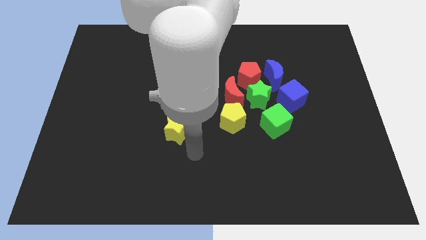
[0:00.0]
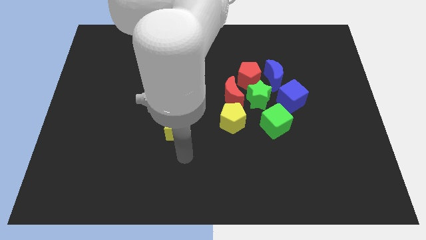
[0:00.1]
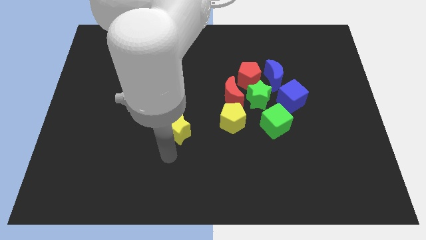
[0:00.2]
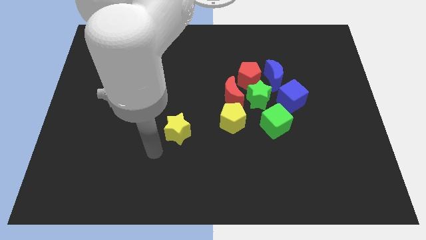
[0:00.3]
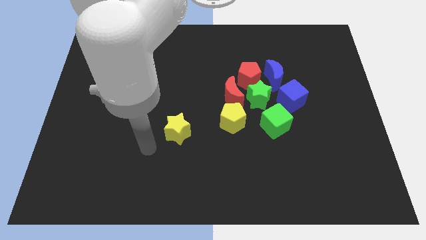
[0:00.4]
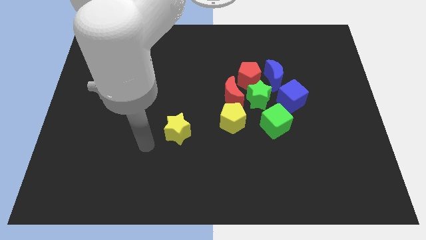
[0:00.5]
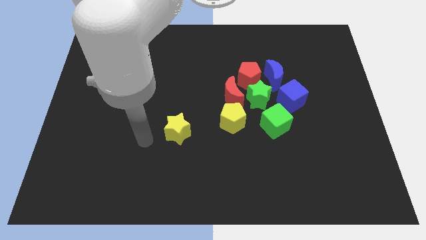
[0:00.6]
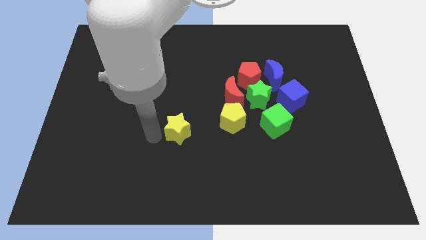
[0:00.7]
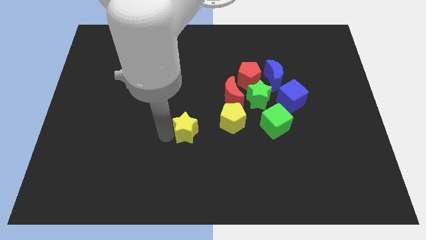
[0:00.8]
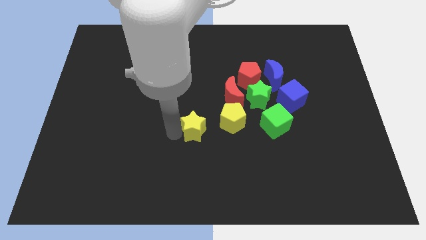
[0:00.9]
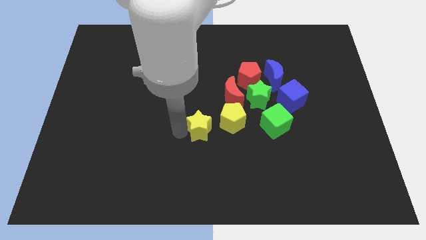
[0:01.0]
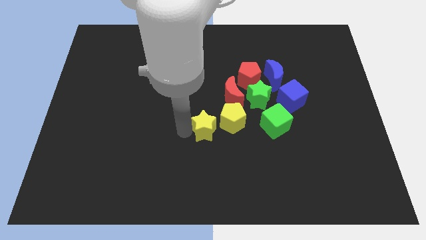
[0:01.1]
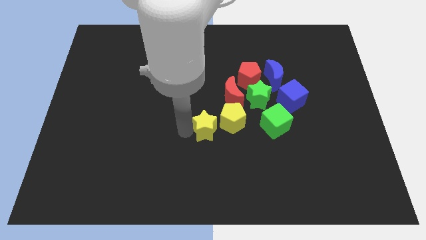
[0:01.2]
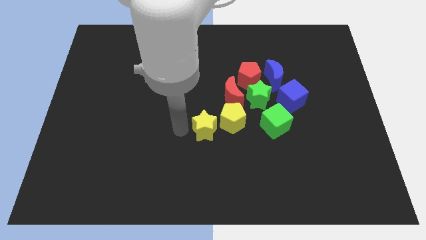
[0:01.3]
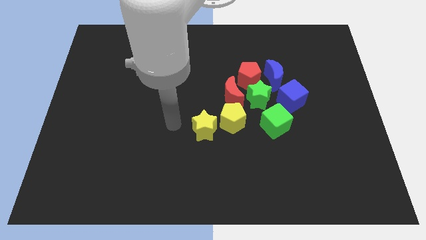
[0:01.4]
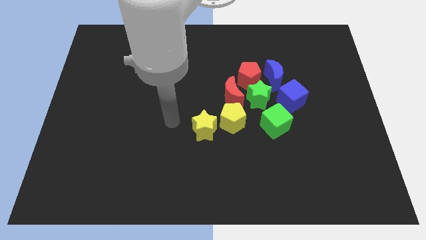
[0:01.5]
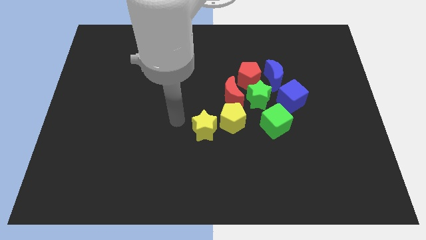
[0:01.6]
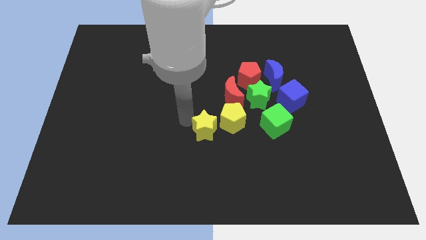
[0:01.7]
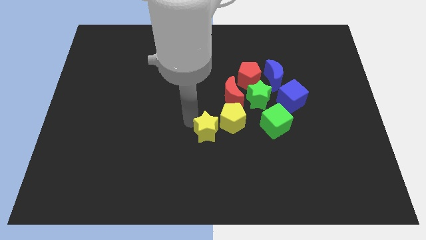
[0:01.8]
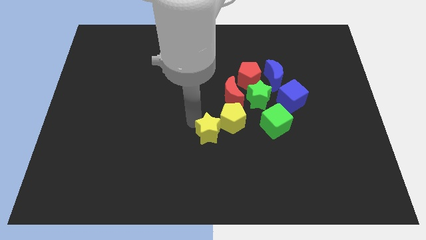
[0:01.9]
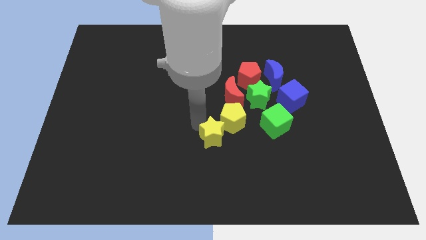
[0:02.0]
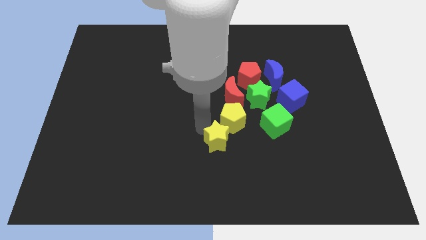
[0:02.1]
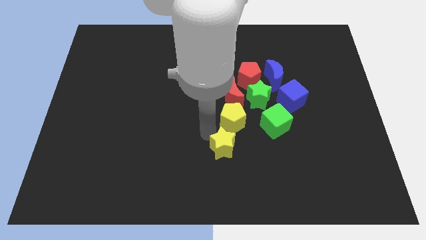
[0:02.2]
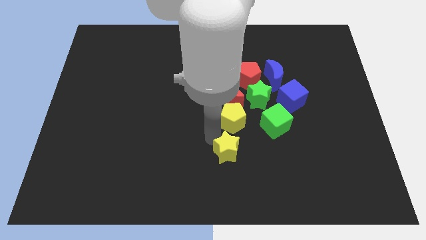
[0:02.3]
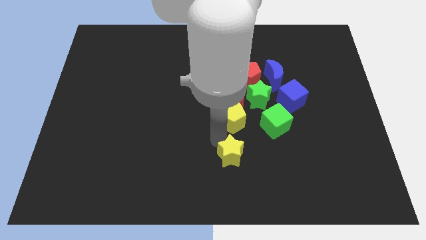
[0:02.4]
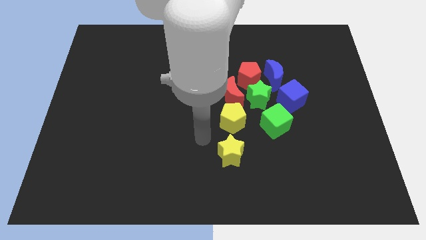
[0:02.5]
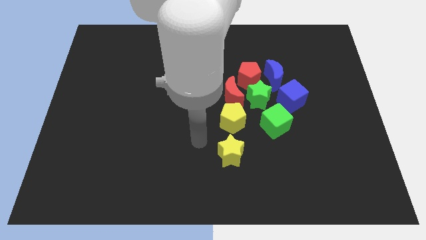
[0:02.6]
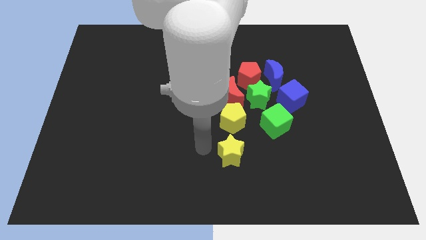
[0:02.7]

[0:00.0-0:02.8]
move the yellow star down to the yellow pentagon

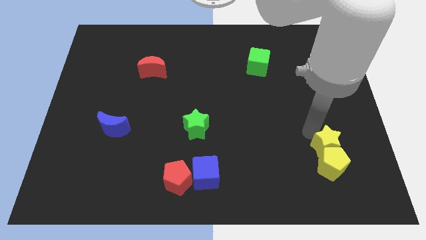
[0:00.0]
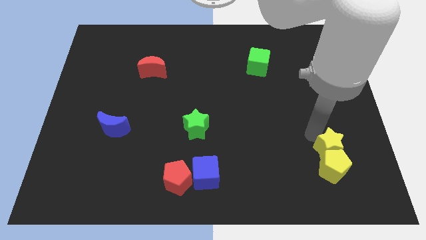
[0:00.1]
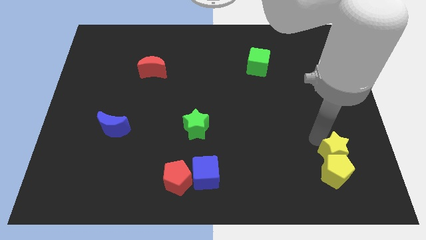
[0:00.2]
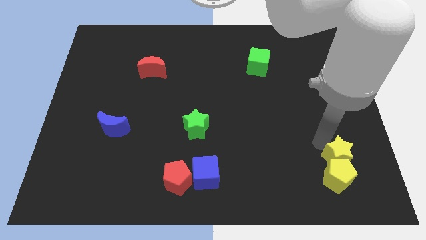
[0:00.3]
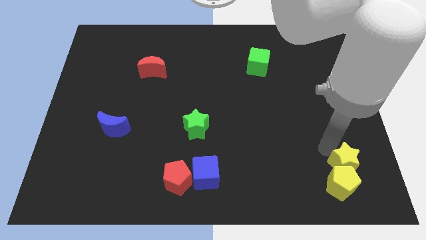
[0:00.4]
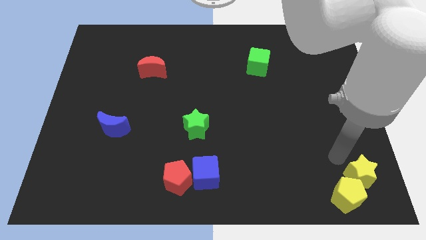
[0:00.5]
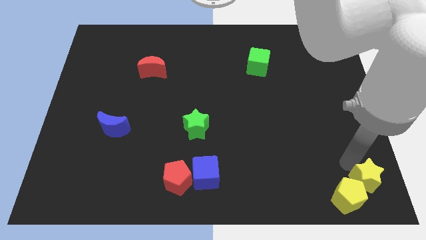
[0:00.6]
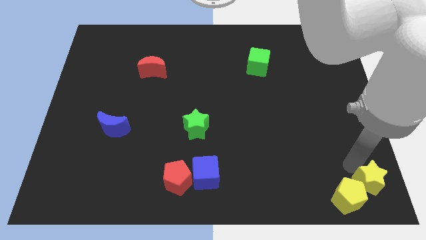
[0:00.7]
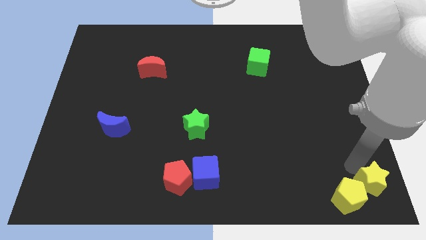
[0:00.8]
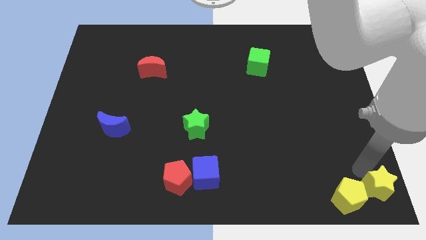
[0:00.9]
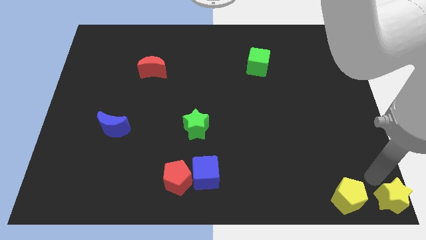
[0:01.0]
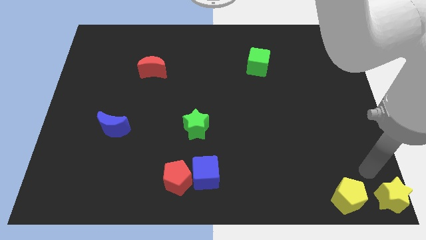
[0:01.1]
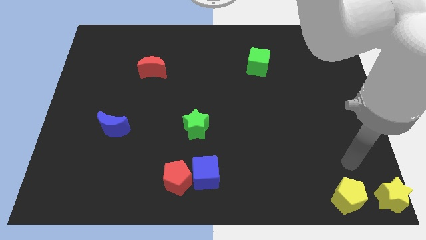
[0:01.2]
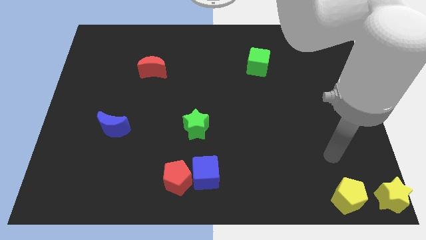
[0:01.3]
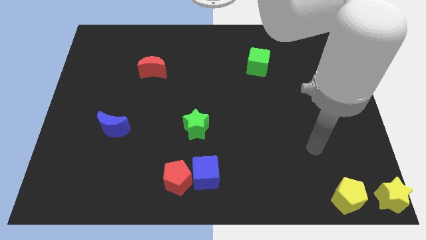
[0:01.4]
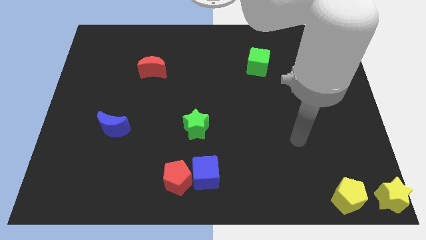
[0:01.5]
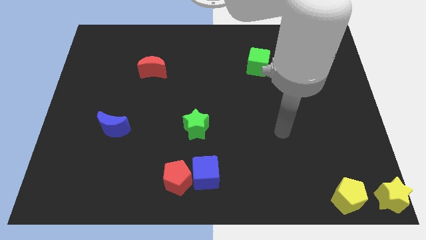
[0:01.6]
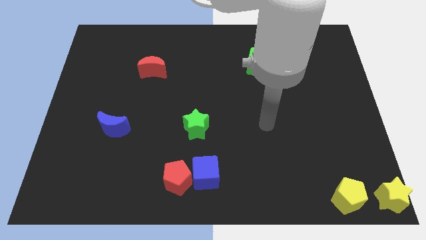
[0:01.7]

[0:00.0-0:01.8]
place the yellow star to the right side of the yellow pentagon

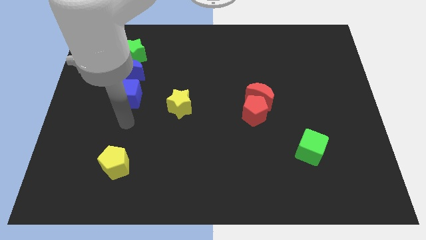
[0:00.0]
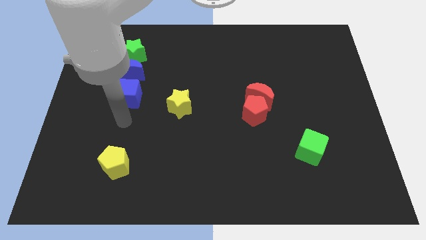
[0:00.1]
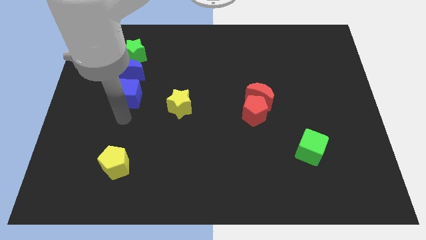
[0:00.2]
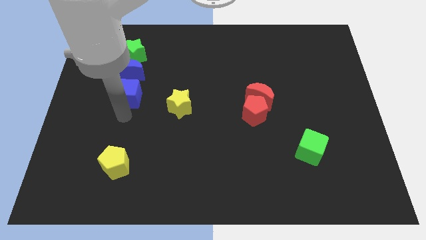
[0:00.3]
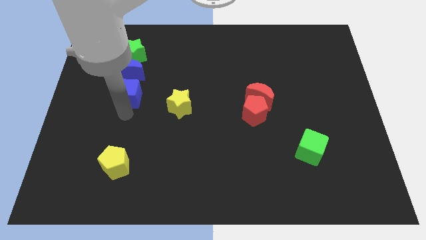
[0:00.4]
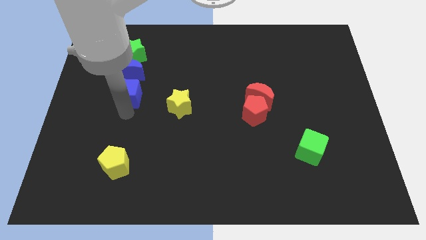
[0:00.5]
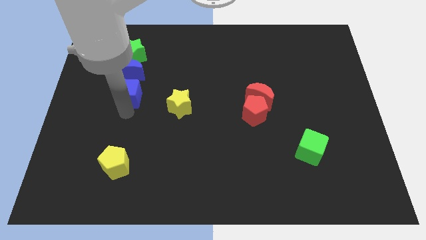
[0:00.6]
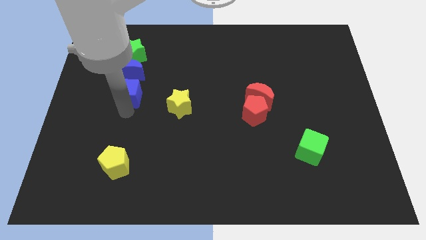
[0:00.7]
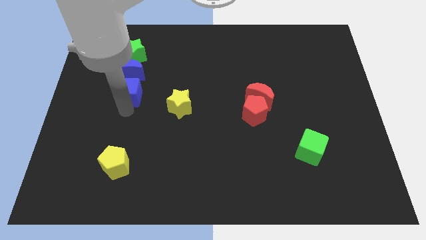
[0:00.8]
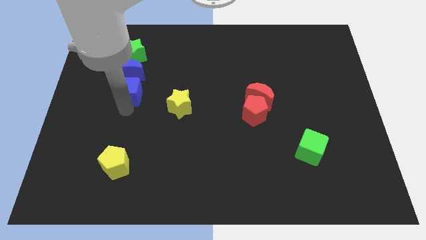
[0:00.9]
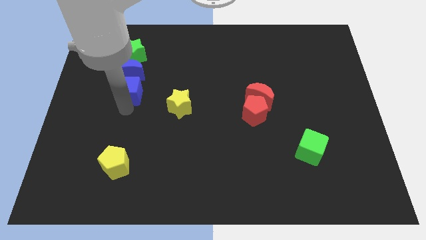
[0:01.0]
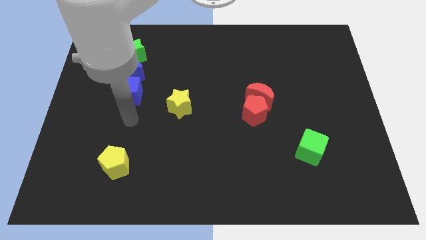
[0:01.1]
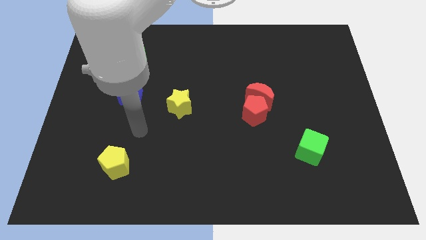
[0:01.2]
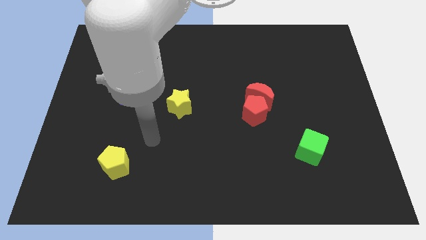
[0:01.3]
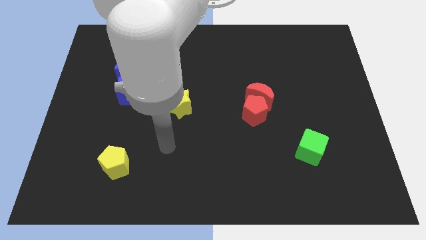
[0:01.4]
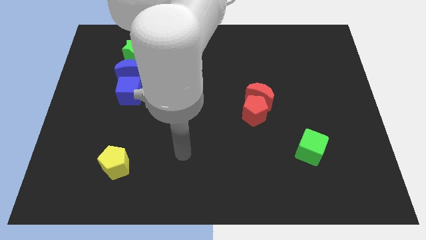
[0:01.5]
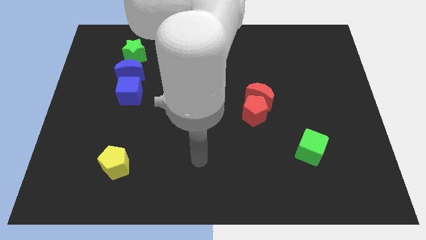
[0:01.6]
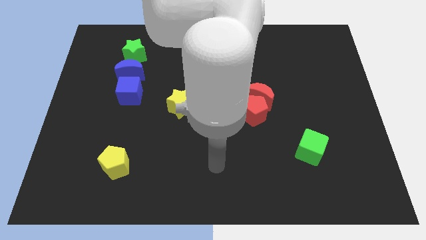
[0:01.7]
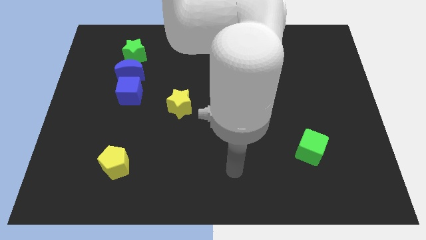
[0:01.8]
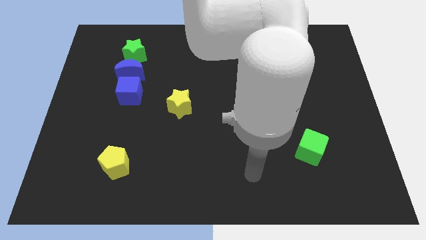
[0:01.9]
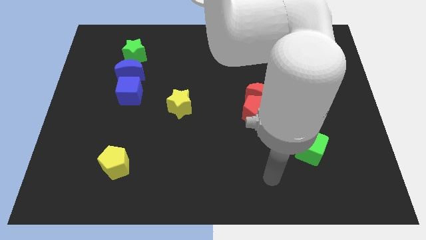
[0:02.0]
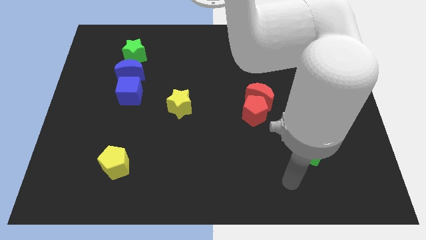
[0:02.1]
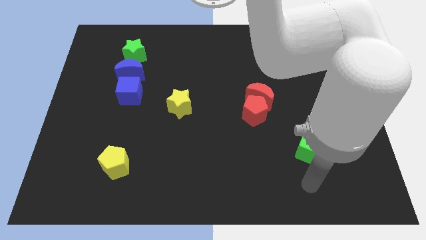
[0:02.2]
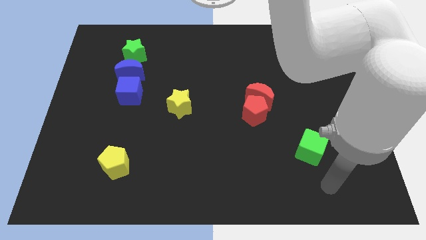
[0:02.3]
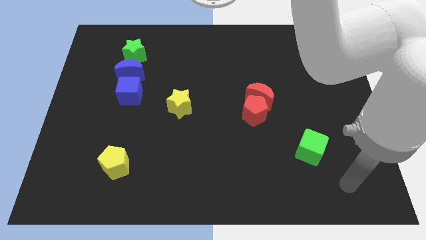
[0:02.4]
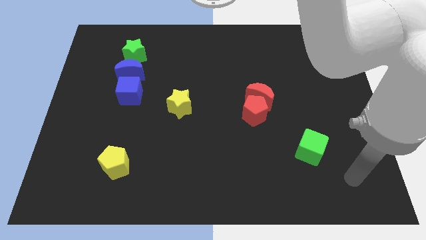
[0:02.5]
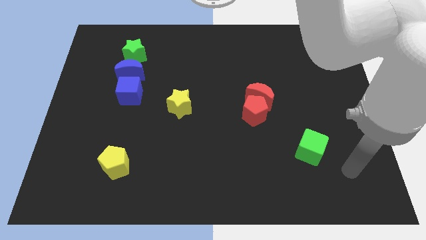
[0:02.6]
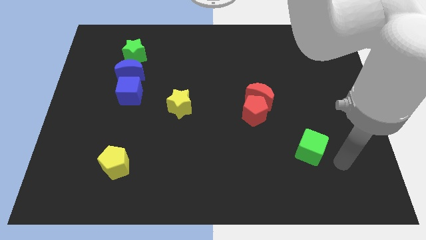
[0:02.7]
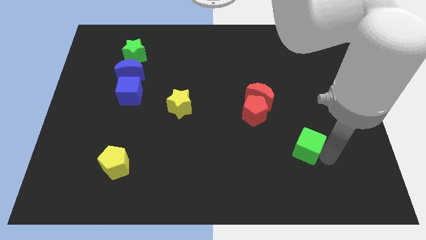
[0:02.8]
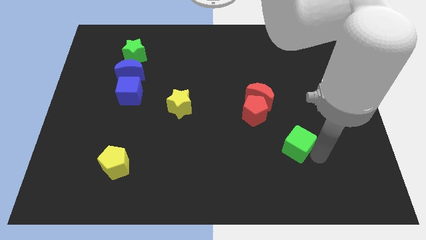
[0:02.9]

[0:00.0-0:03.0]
go near the green cube

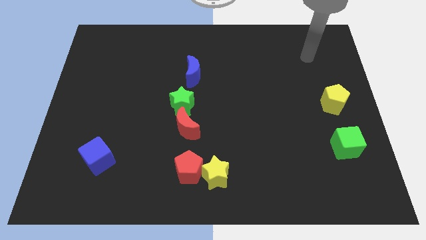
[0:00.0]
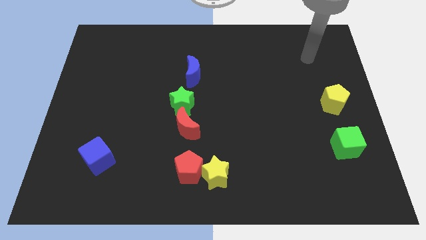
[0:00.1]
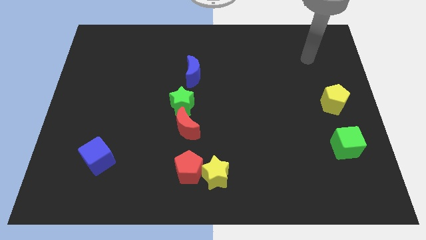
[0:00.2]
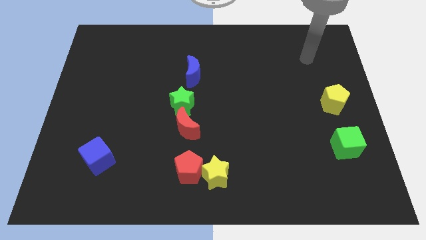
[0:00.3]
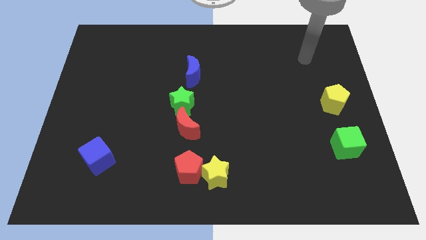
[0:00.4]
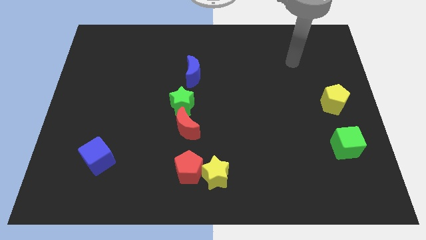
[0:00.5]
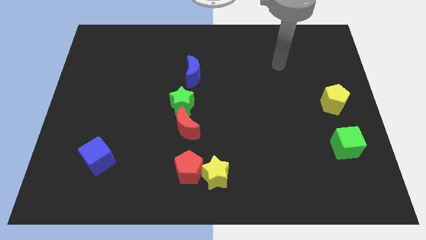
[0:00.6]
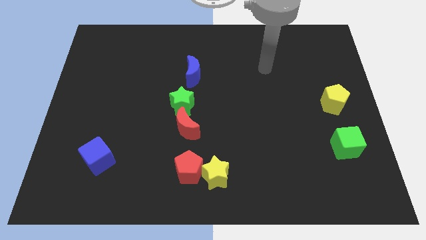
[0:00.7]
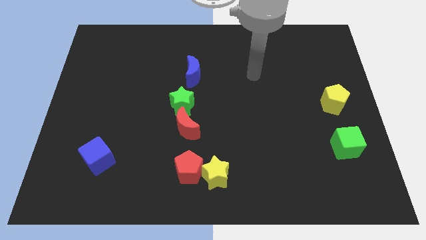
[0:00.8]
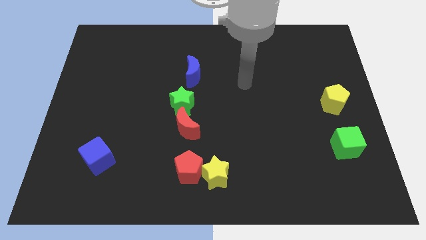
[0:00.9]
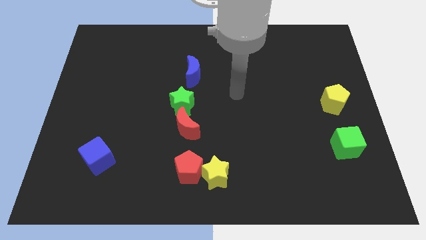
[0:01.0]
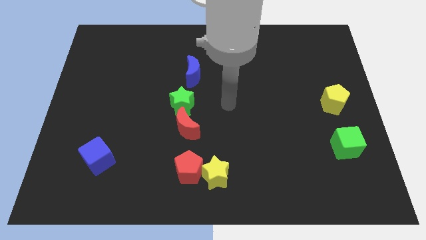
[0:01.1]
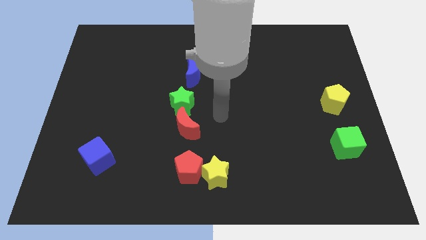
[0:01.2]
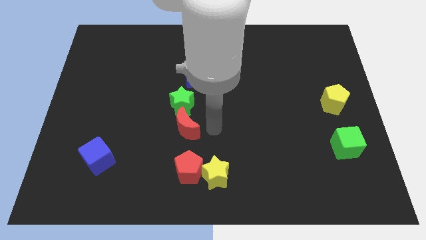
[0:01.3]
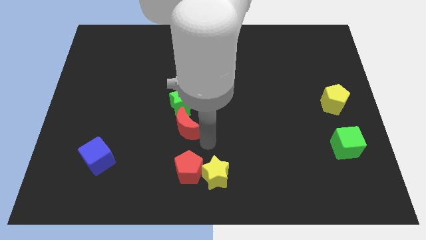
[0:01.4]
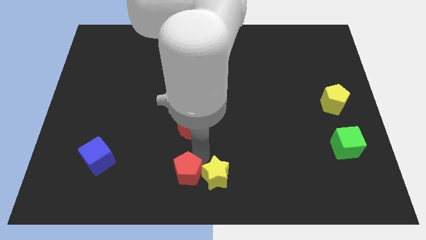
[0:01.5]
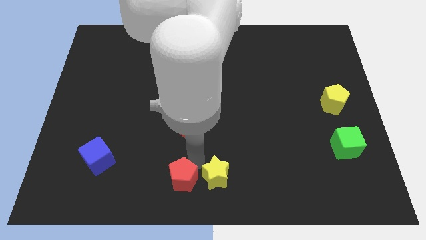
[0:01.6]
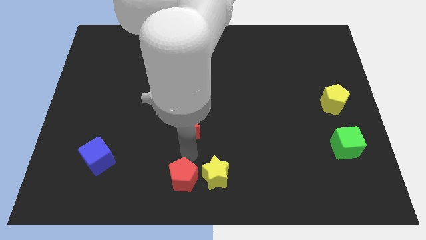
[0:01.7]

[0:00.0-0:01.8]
put your hand in between the red pentagon and the red crescent
